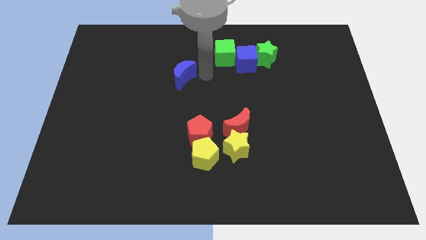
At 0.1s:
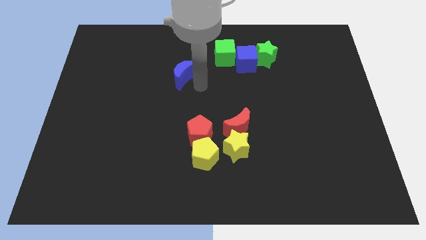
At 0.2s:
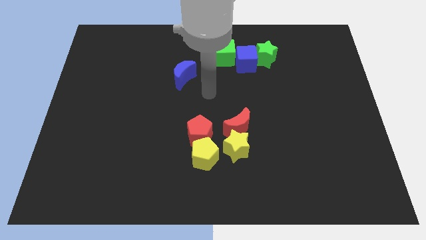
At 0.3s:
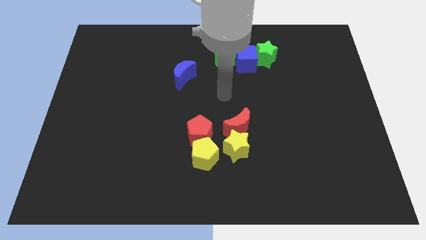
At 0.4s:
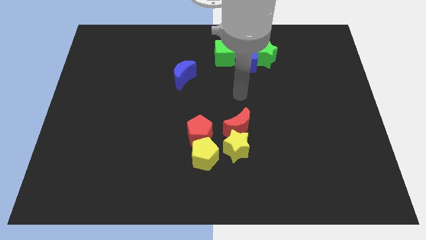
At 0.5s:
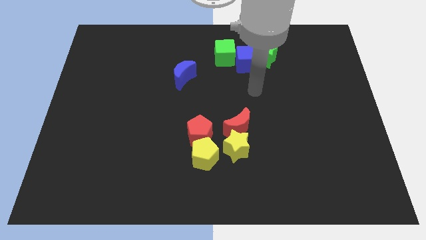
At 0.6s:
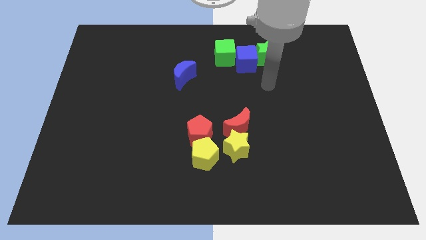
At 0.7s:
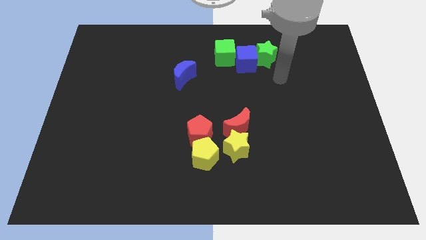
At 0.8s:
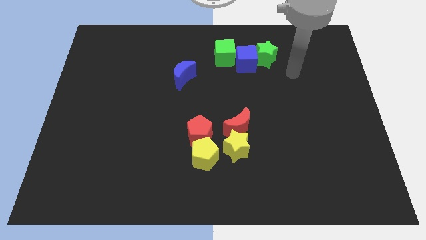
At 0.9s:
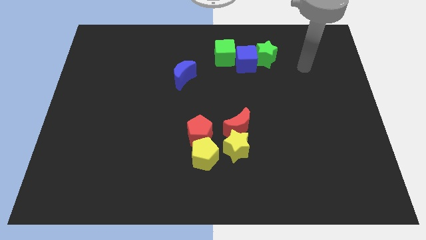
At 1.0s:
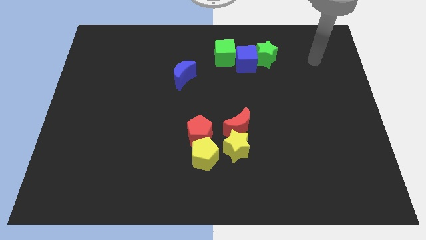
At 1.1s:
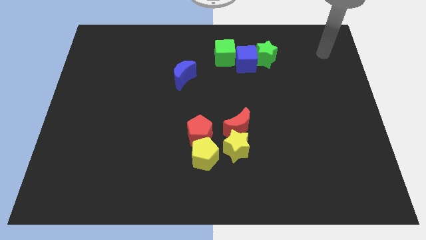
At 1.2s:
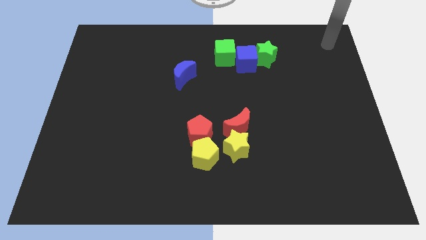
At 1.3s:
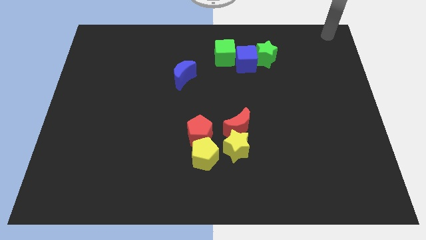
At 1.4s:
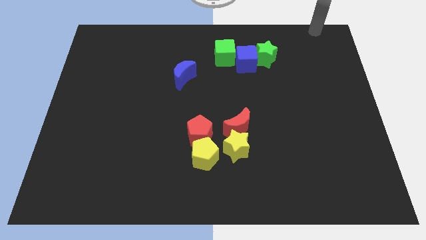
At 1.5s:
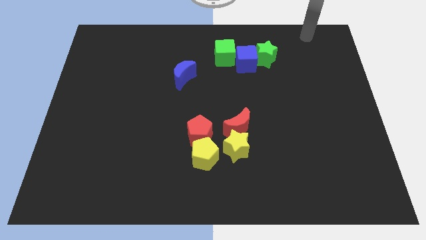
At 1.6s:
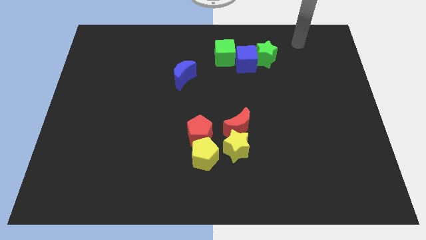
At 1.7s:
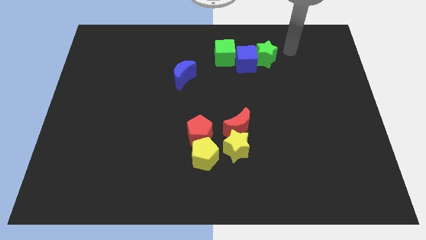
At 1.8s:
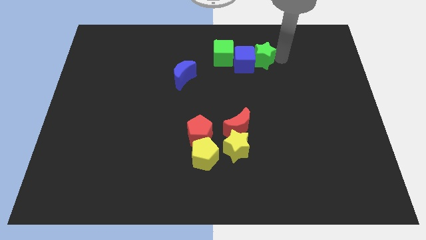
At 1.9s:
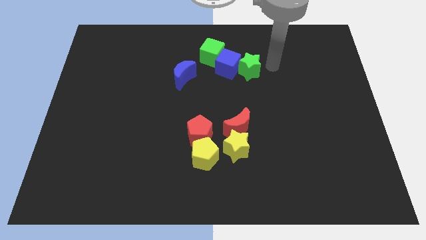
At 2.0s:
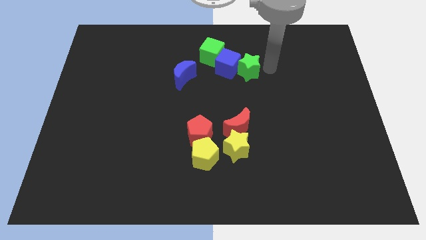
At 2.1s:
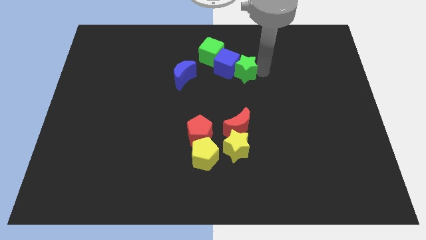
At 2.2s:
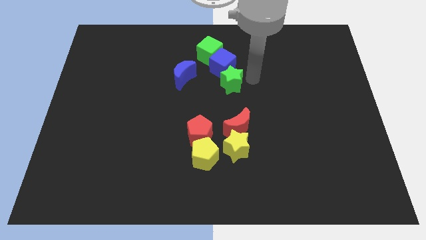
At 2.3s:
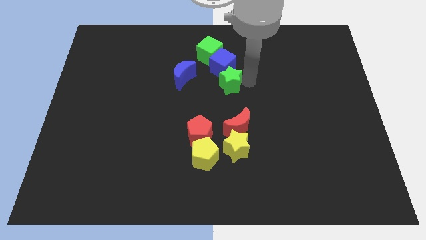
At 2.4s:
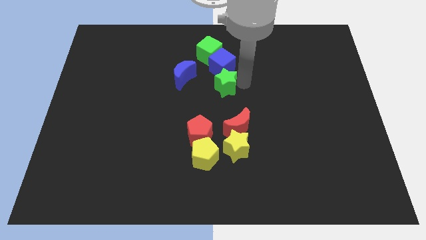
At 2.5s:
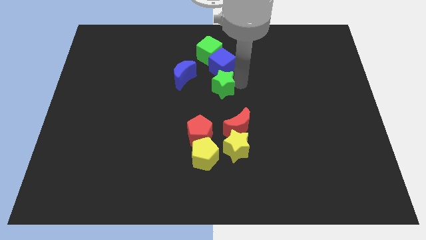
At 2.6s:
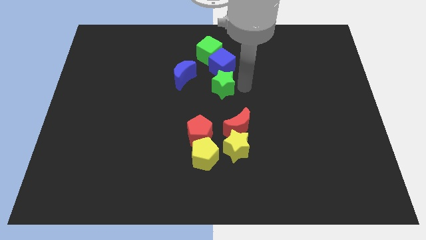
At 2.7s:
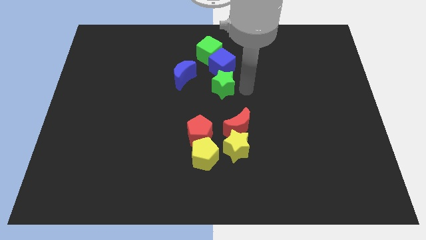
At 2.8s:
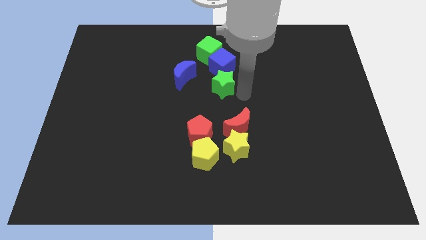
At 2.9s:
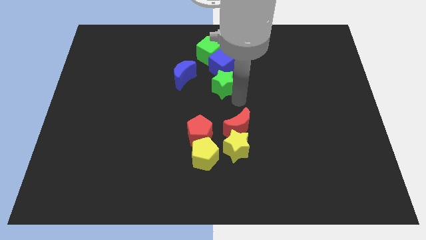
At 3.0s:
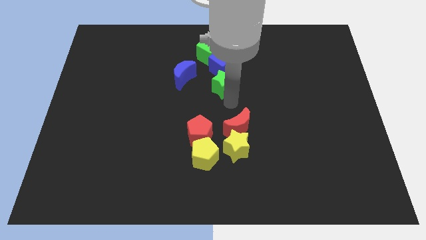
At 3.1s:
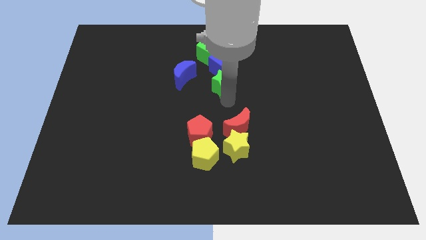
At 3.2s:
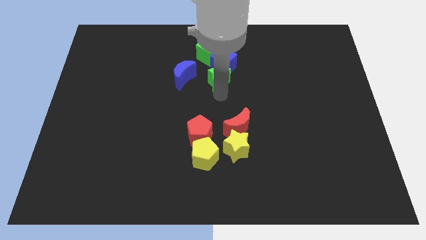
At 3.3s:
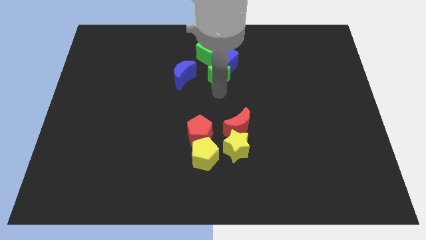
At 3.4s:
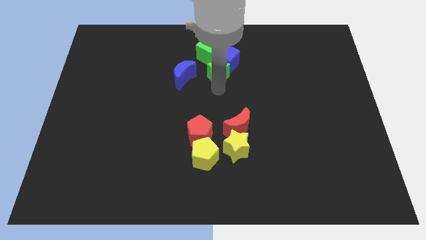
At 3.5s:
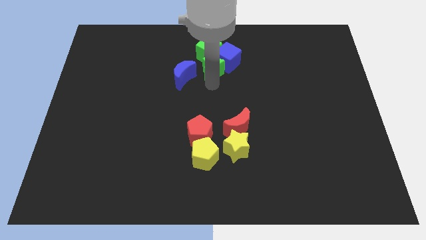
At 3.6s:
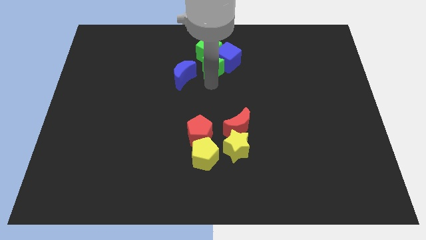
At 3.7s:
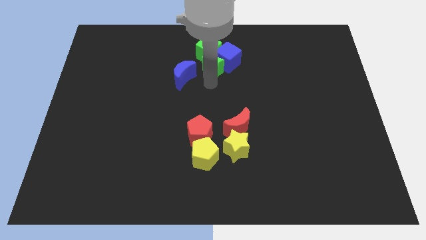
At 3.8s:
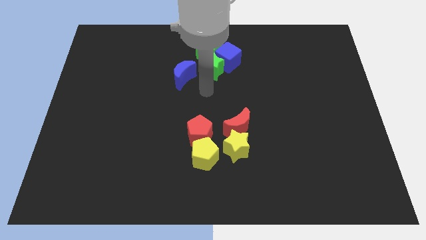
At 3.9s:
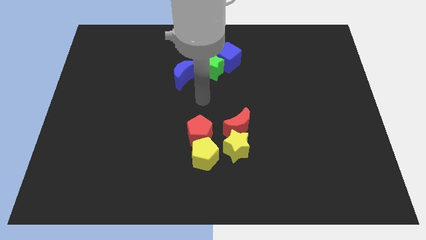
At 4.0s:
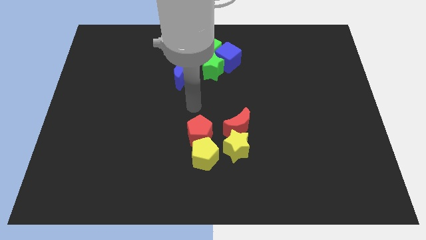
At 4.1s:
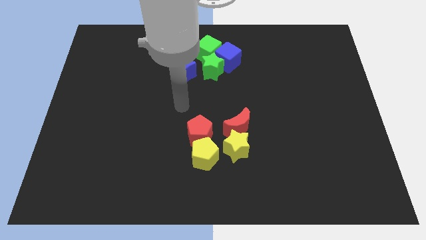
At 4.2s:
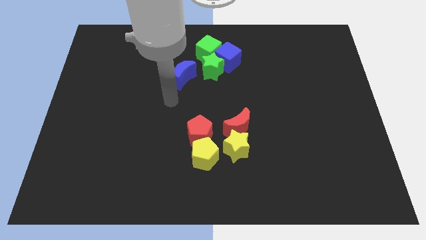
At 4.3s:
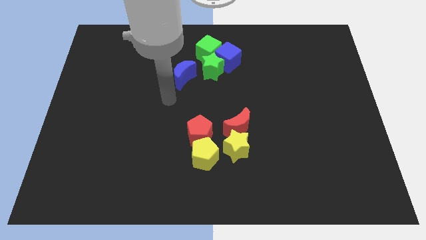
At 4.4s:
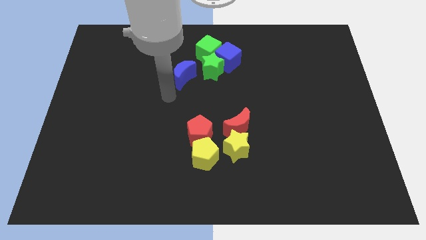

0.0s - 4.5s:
place the green star below the green cube

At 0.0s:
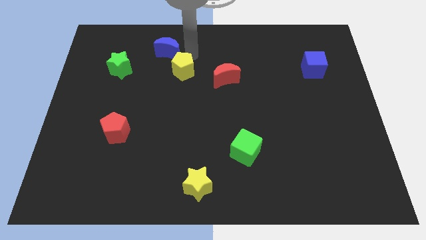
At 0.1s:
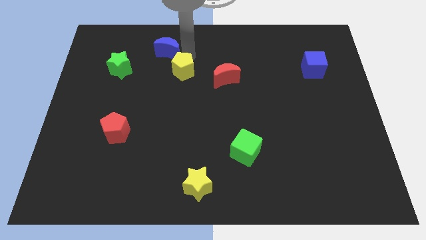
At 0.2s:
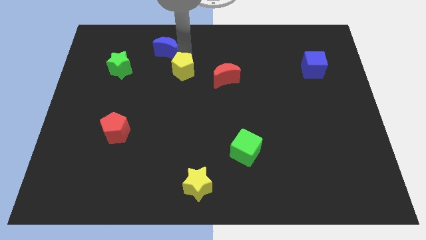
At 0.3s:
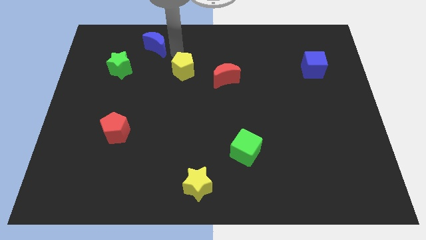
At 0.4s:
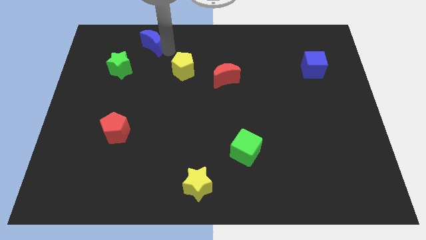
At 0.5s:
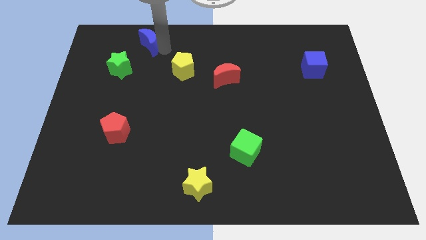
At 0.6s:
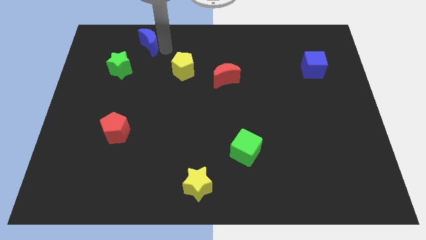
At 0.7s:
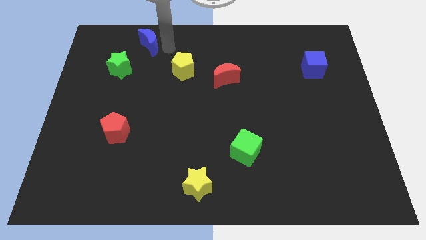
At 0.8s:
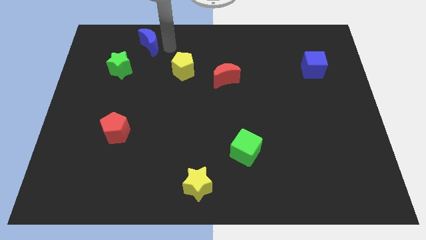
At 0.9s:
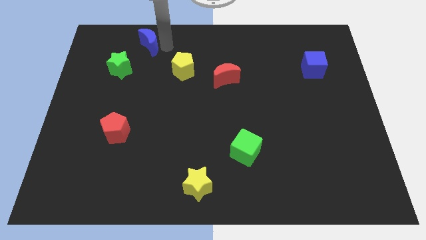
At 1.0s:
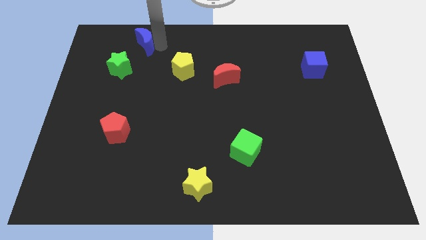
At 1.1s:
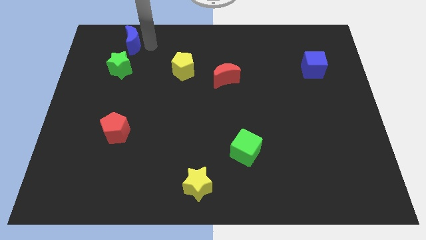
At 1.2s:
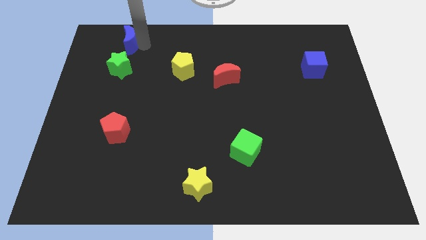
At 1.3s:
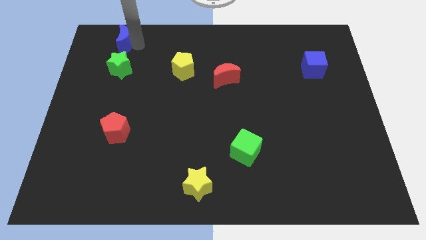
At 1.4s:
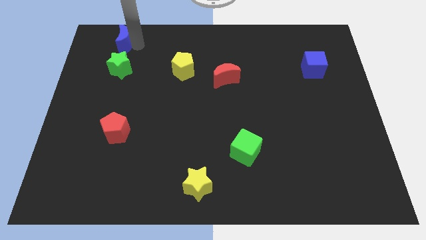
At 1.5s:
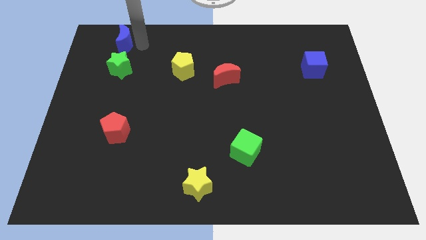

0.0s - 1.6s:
push the blue crescent above the green star

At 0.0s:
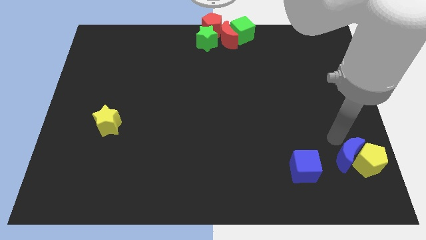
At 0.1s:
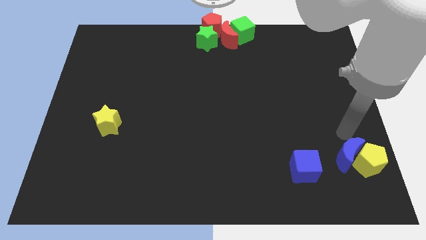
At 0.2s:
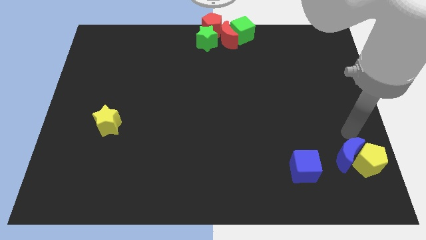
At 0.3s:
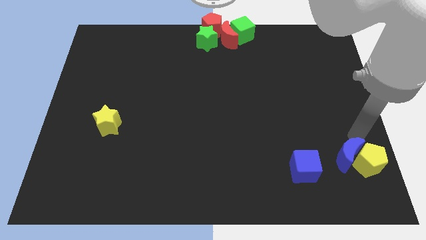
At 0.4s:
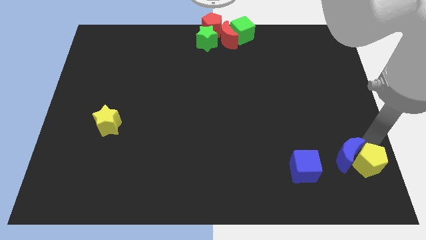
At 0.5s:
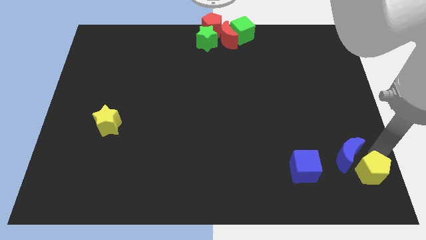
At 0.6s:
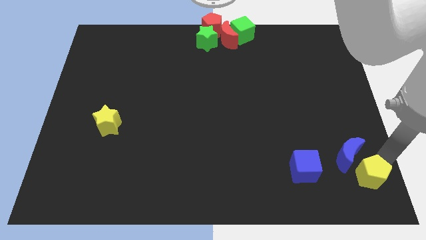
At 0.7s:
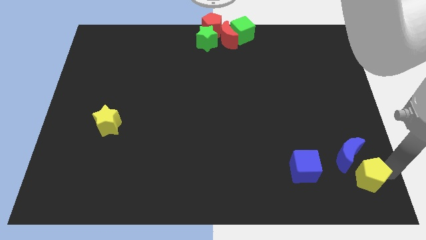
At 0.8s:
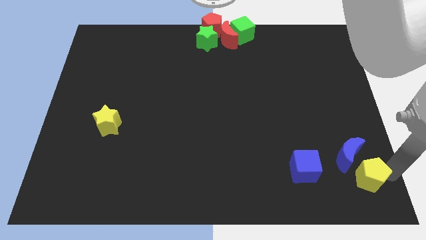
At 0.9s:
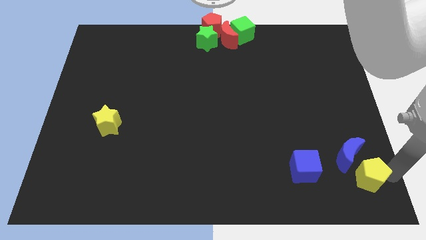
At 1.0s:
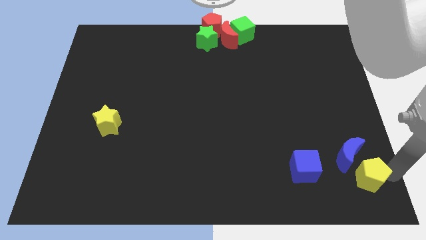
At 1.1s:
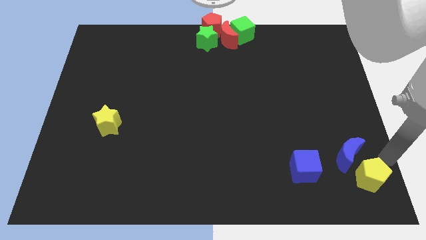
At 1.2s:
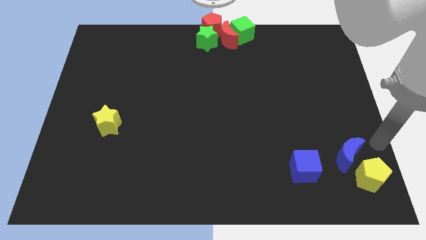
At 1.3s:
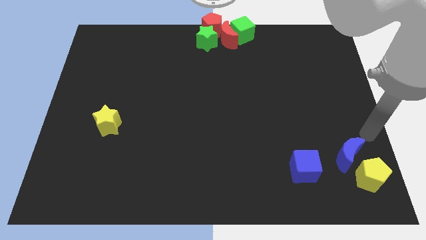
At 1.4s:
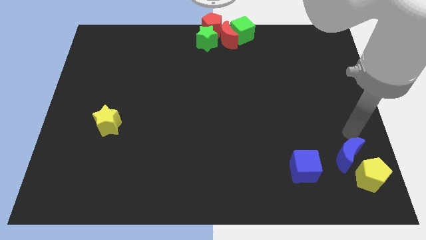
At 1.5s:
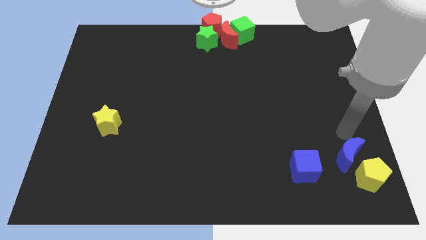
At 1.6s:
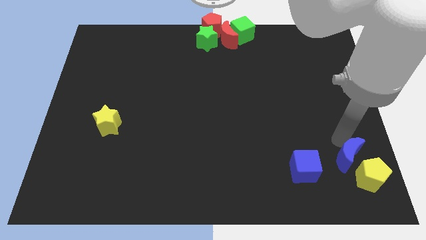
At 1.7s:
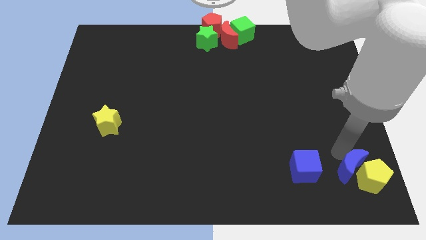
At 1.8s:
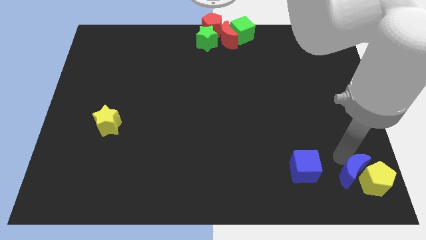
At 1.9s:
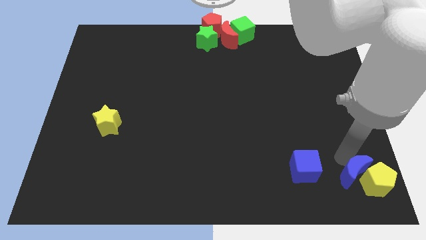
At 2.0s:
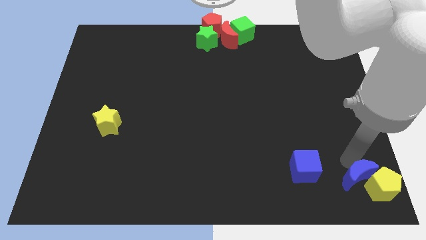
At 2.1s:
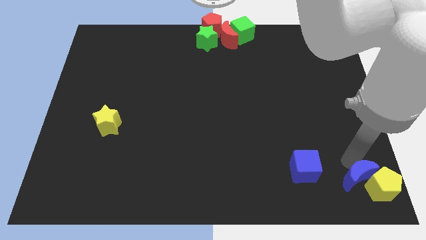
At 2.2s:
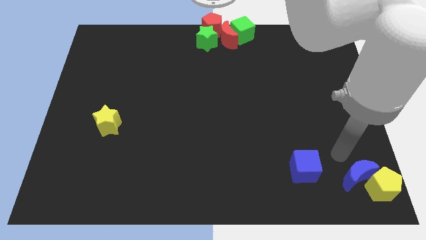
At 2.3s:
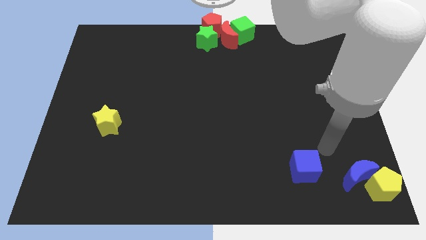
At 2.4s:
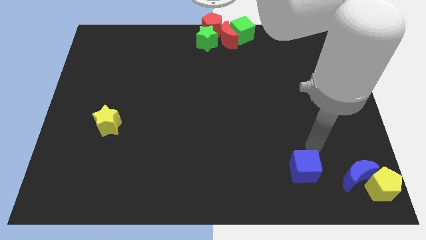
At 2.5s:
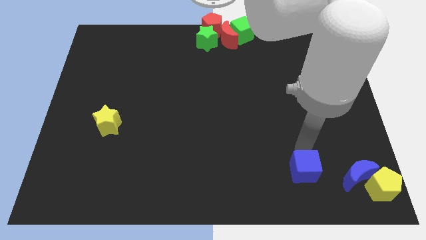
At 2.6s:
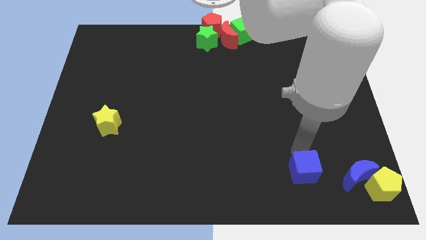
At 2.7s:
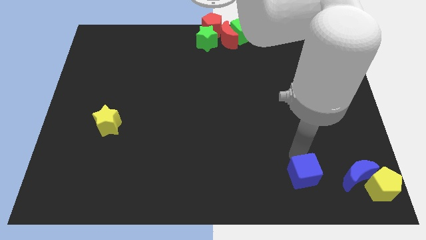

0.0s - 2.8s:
place blue crescent and yellow pentagon to the bottom right corner

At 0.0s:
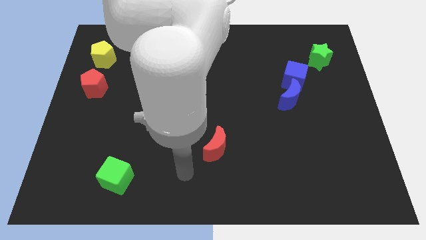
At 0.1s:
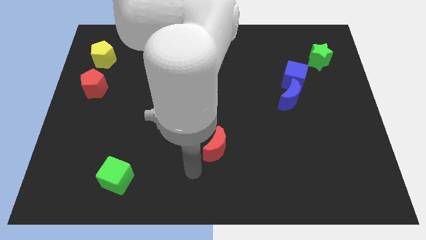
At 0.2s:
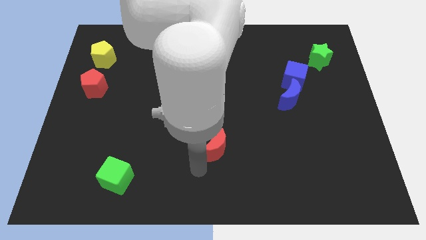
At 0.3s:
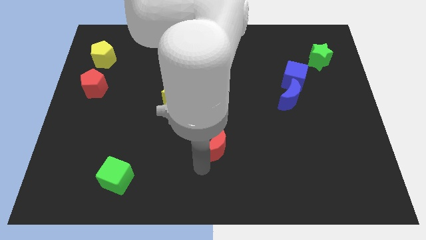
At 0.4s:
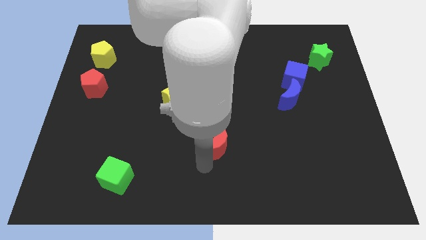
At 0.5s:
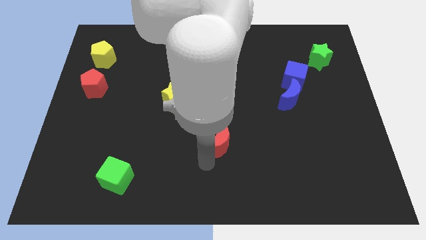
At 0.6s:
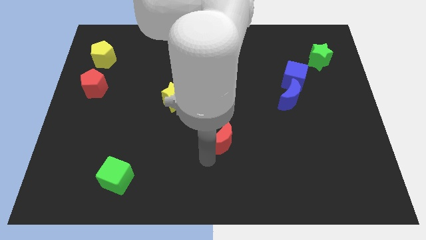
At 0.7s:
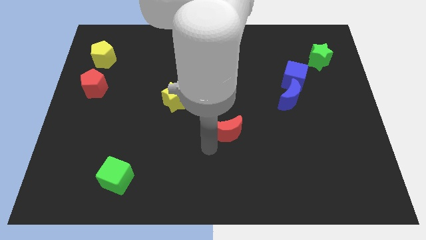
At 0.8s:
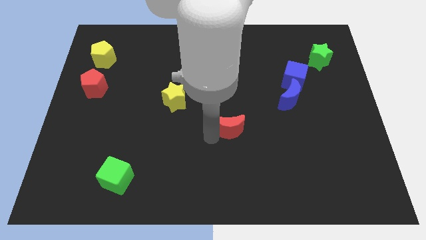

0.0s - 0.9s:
place the red moon diagonally to the right of the yellow star
